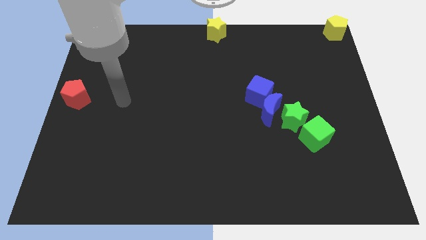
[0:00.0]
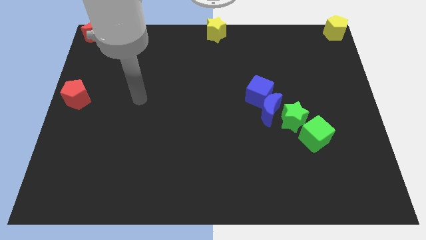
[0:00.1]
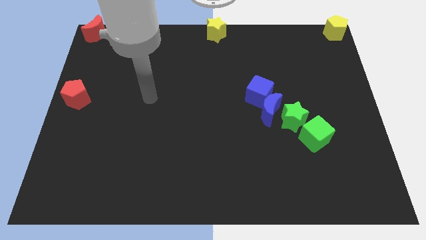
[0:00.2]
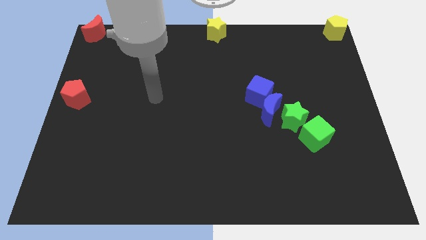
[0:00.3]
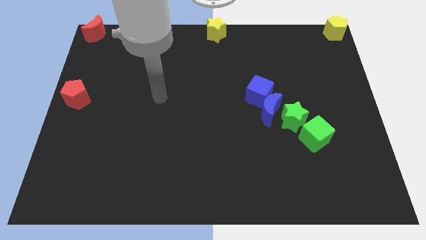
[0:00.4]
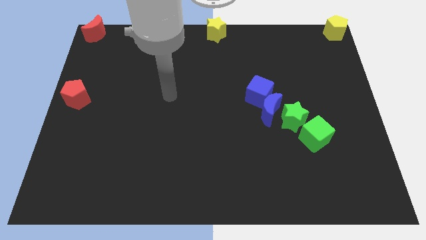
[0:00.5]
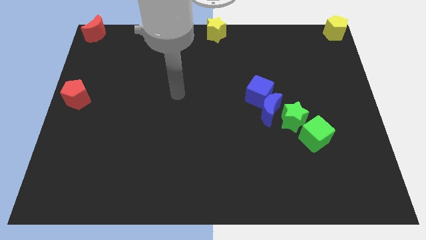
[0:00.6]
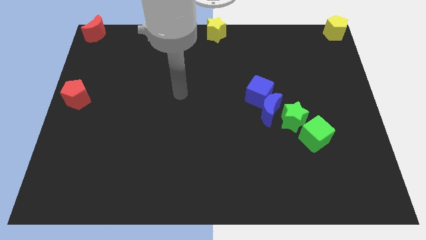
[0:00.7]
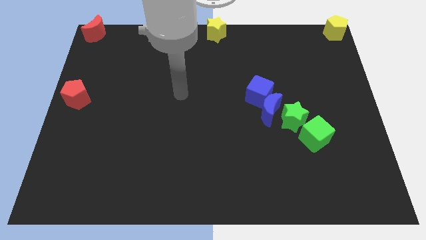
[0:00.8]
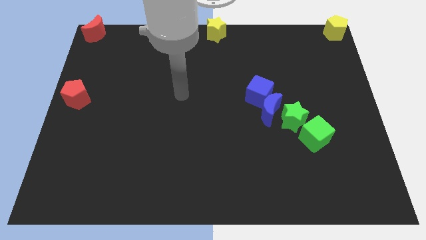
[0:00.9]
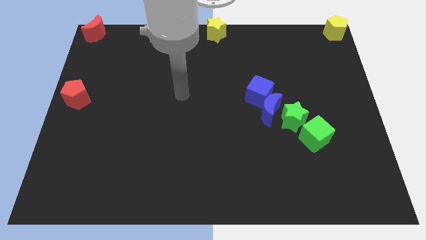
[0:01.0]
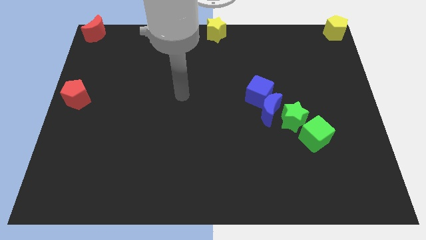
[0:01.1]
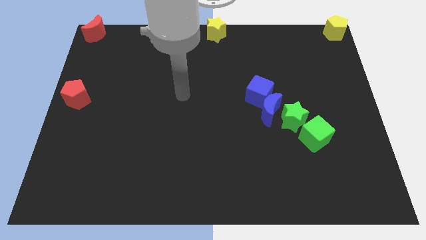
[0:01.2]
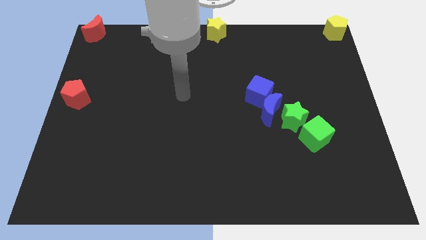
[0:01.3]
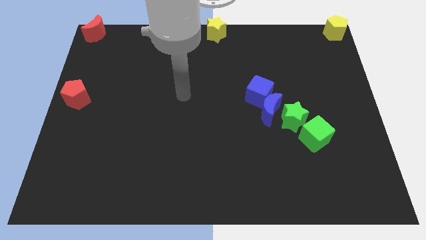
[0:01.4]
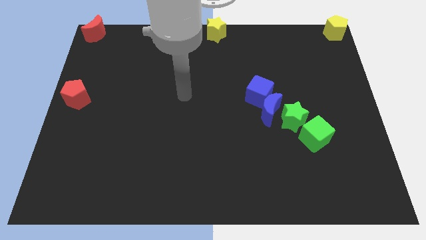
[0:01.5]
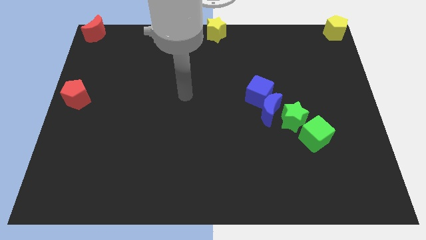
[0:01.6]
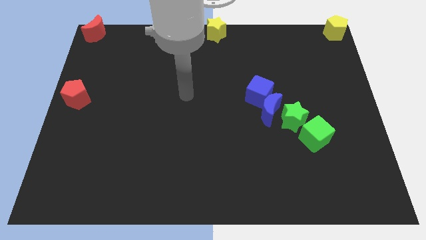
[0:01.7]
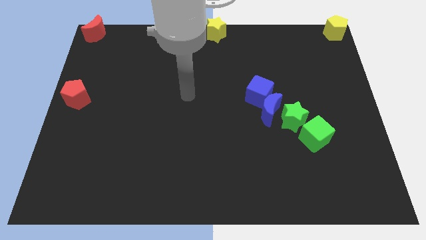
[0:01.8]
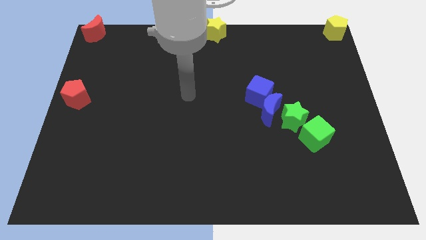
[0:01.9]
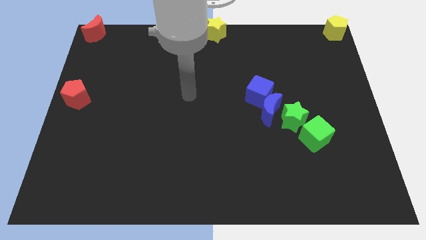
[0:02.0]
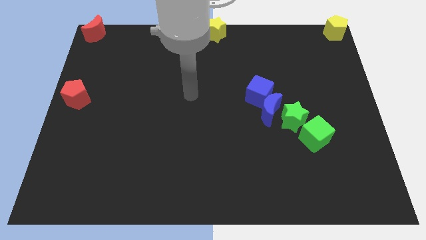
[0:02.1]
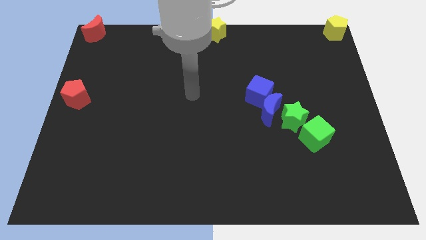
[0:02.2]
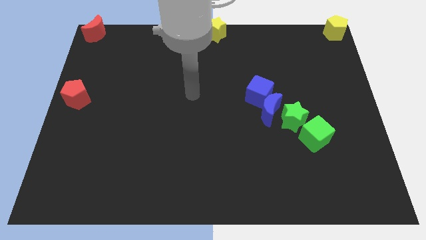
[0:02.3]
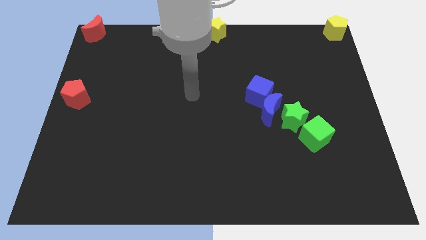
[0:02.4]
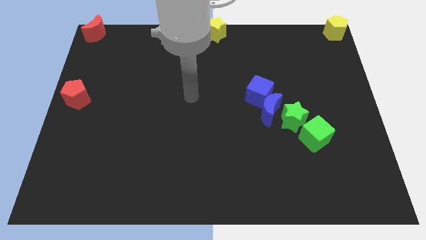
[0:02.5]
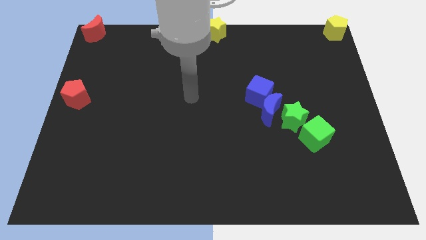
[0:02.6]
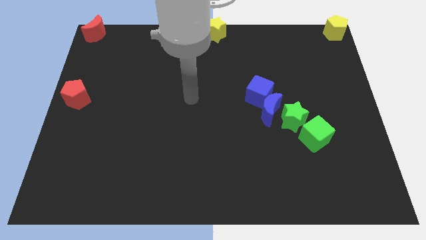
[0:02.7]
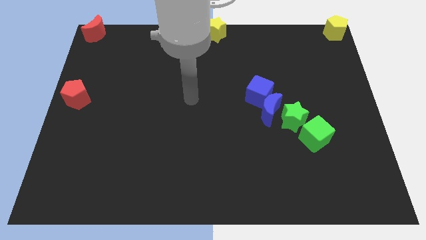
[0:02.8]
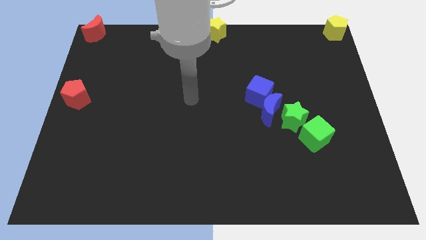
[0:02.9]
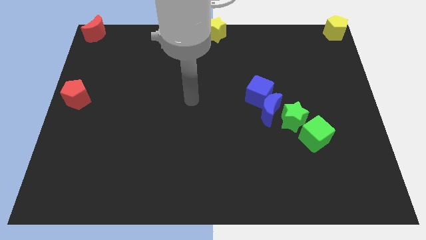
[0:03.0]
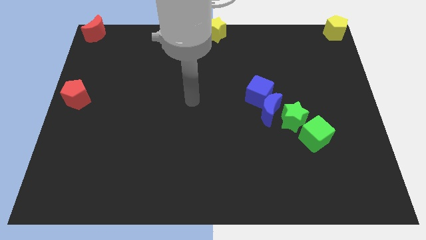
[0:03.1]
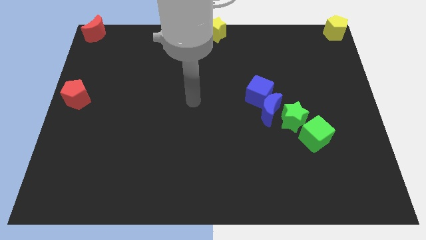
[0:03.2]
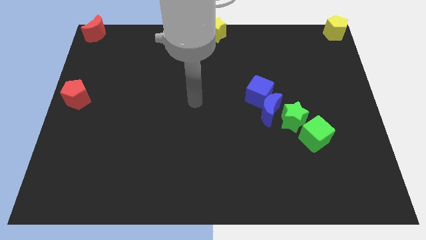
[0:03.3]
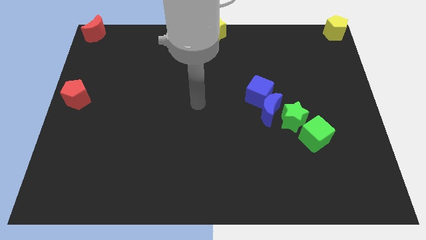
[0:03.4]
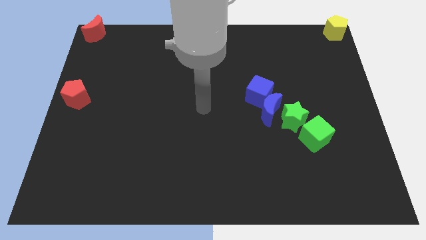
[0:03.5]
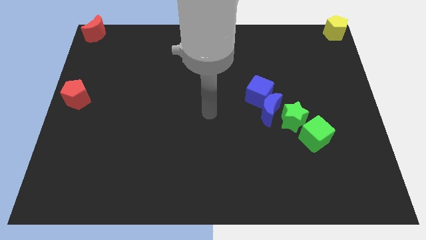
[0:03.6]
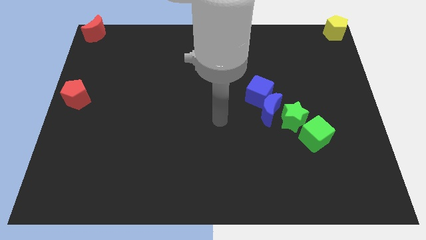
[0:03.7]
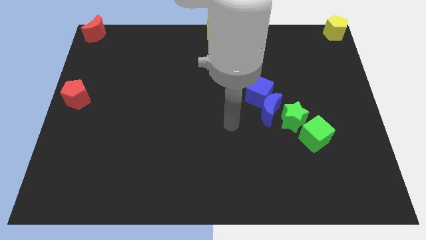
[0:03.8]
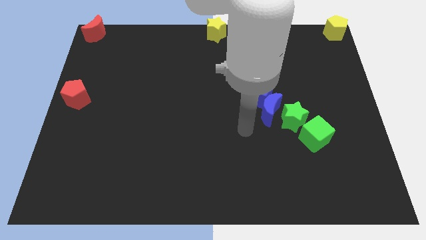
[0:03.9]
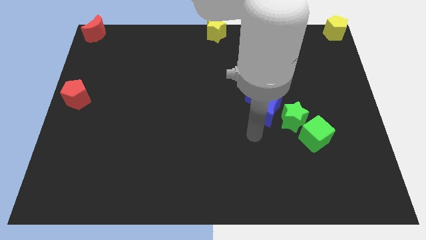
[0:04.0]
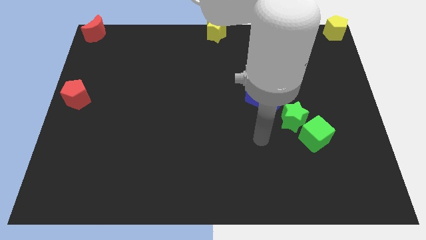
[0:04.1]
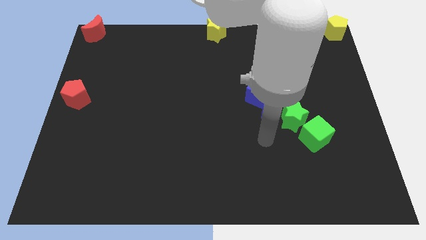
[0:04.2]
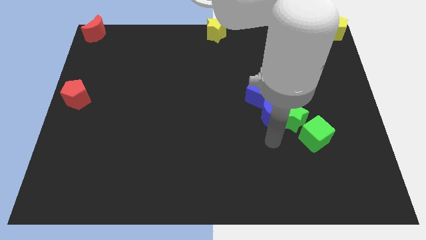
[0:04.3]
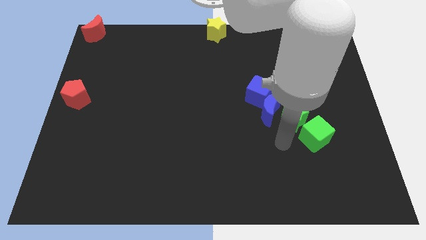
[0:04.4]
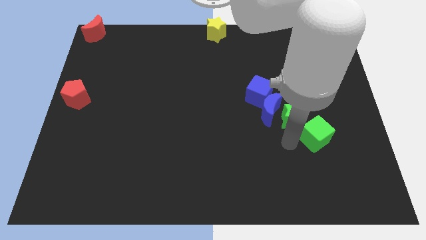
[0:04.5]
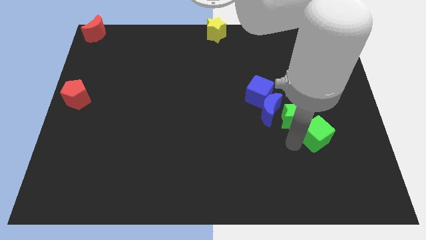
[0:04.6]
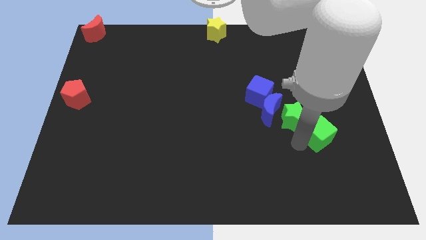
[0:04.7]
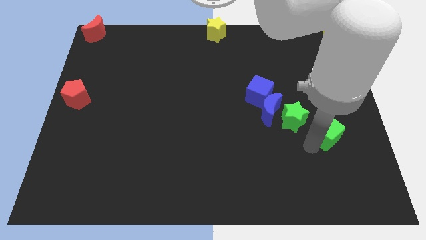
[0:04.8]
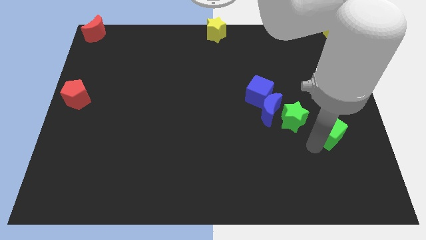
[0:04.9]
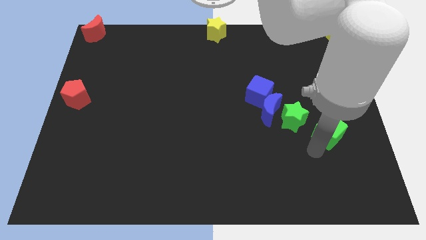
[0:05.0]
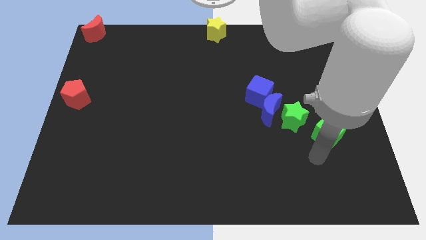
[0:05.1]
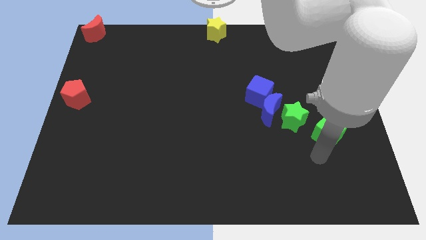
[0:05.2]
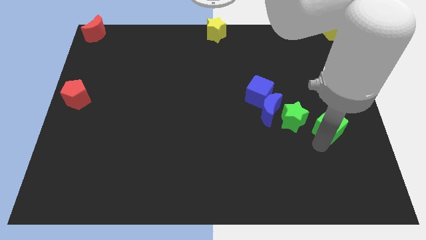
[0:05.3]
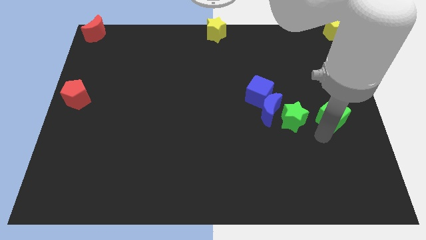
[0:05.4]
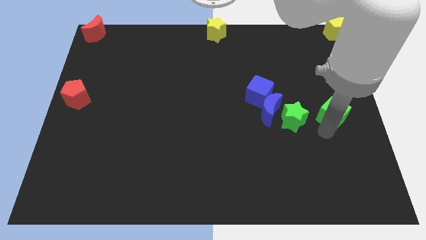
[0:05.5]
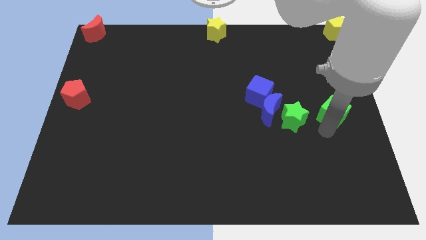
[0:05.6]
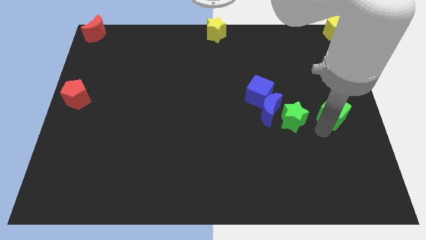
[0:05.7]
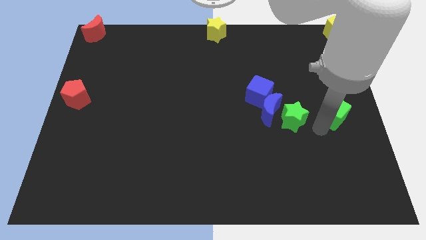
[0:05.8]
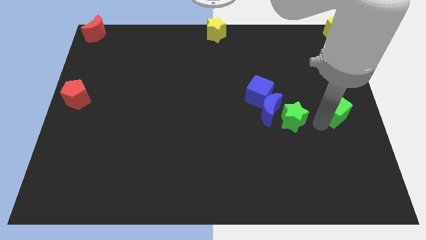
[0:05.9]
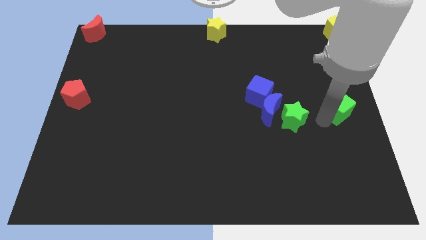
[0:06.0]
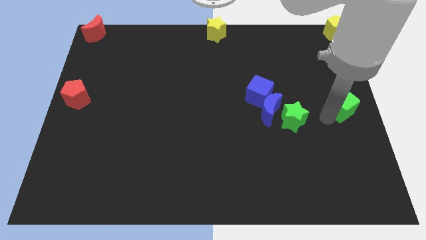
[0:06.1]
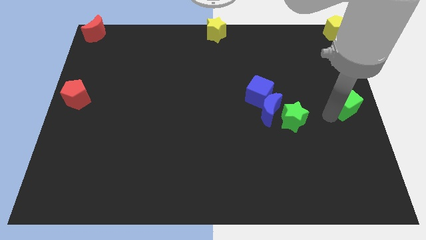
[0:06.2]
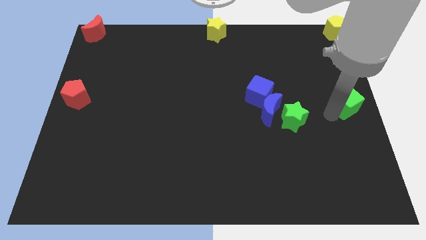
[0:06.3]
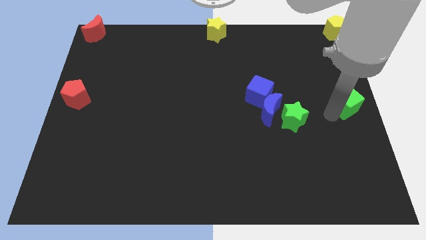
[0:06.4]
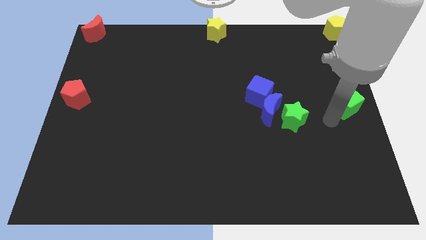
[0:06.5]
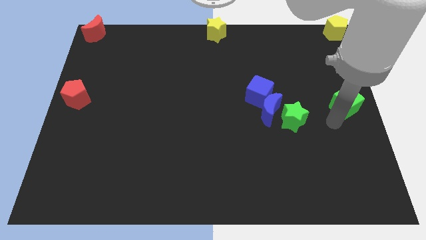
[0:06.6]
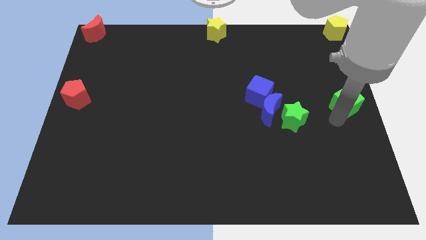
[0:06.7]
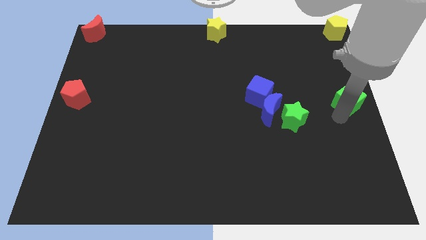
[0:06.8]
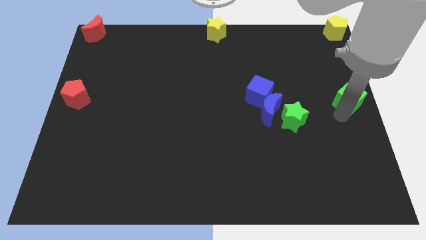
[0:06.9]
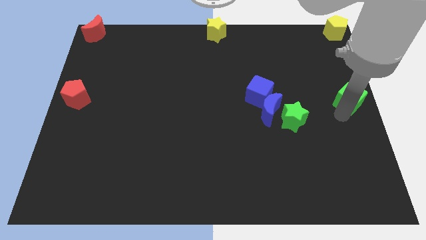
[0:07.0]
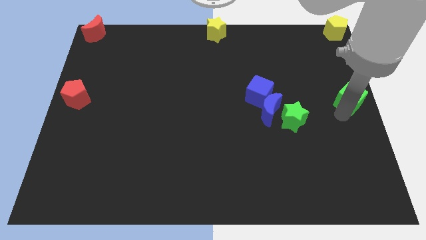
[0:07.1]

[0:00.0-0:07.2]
push the green cube to the right center of the board

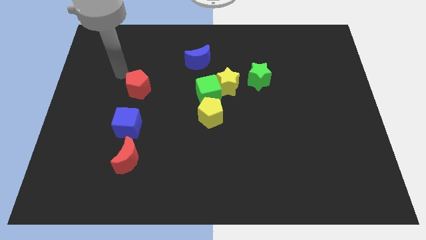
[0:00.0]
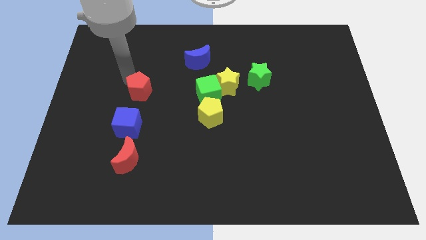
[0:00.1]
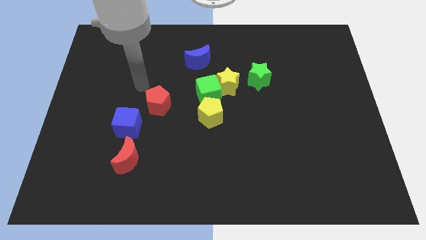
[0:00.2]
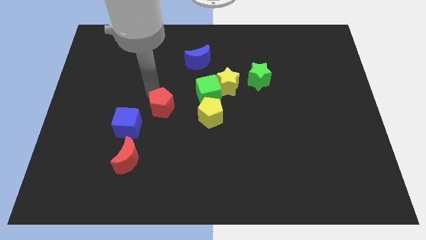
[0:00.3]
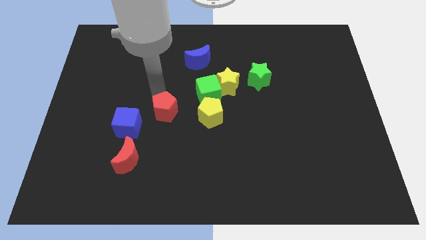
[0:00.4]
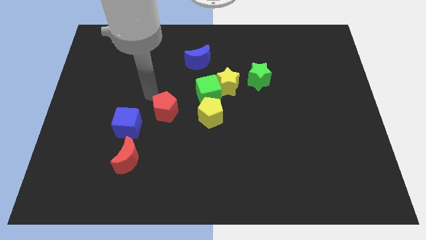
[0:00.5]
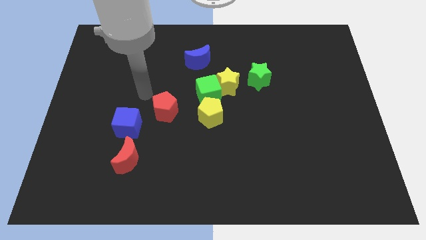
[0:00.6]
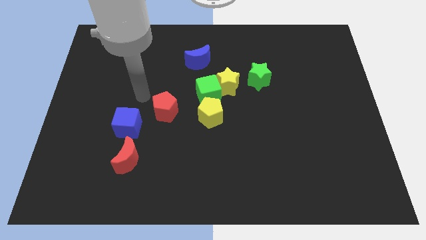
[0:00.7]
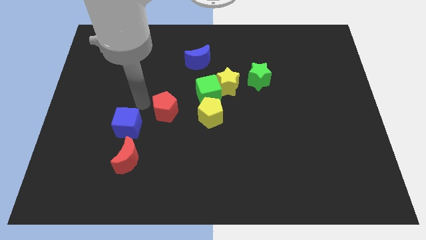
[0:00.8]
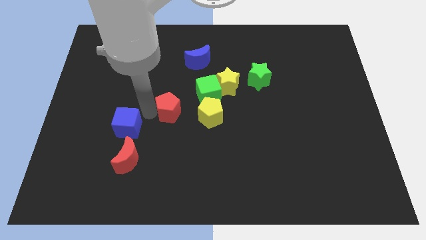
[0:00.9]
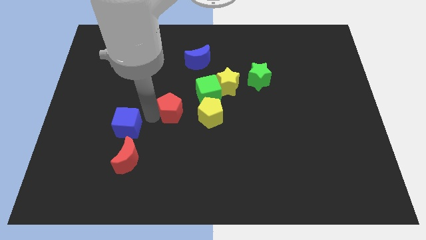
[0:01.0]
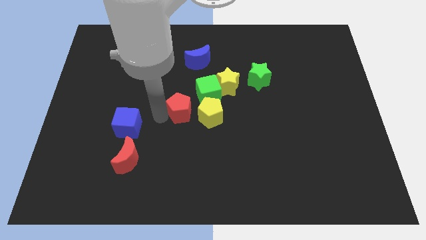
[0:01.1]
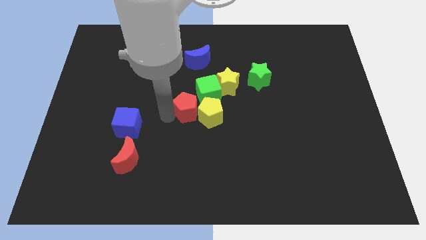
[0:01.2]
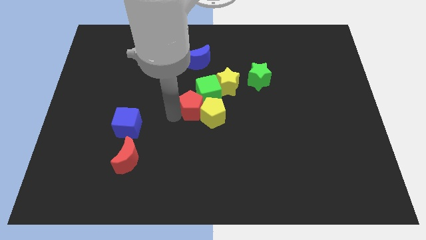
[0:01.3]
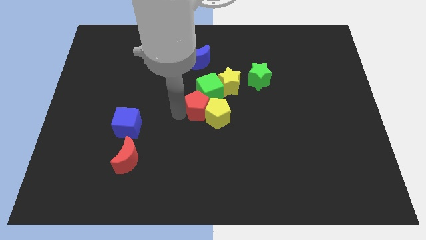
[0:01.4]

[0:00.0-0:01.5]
push the red pentagon into the yellow pentagon and the green cube

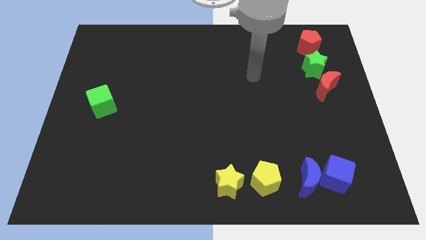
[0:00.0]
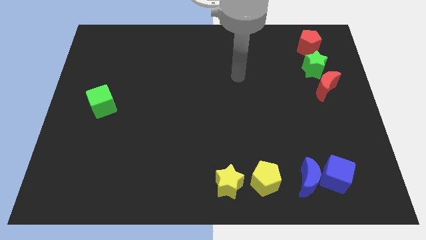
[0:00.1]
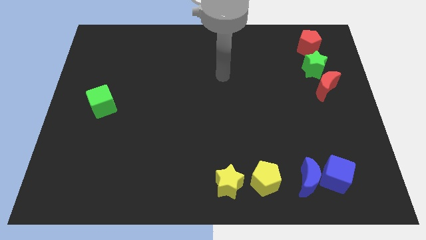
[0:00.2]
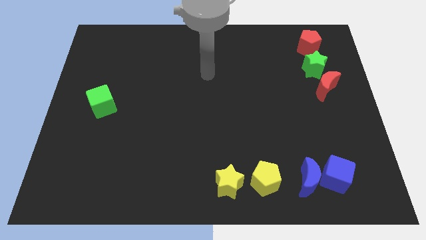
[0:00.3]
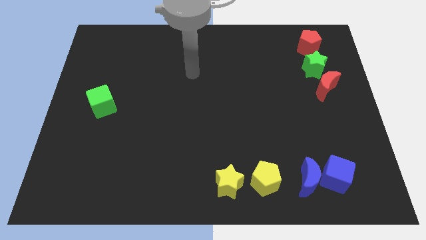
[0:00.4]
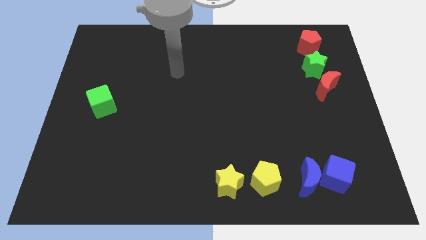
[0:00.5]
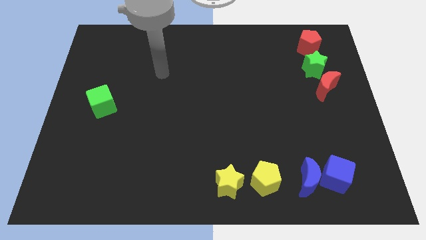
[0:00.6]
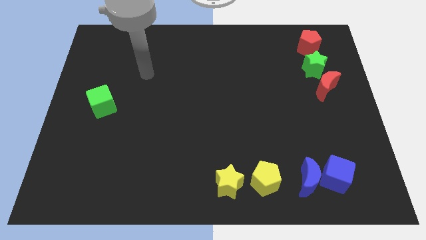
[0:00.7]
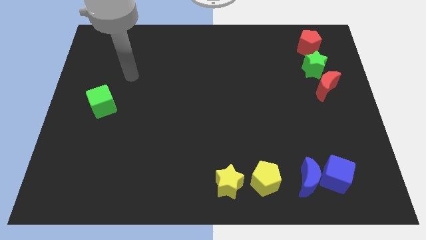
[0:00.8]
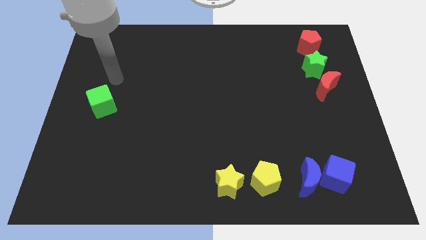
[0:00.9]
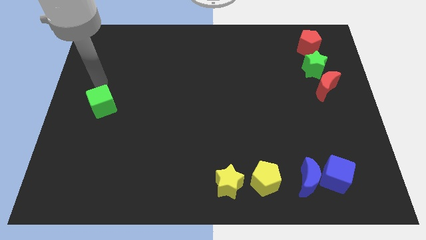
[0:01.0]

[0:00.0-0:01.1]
move arm near green cube
